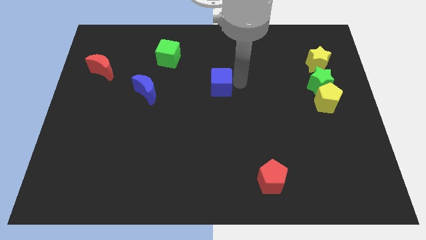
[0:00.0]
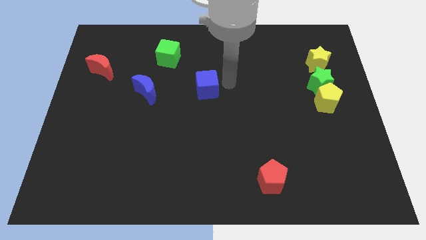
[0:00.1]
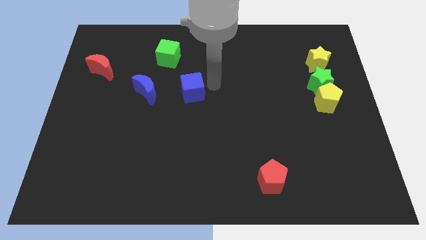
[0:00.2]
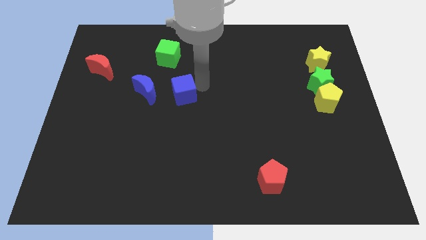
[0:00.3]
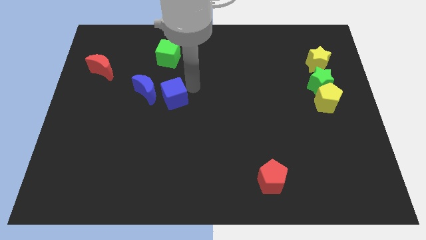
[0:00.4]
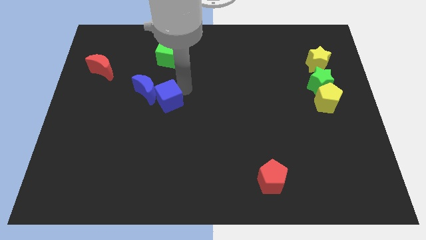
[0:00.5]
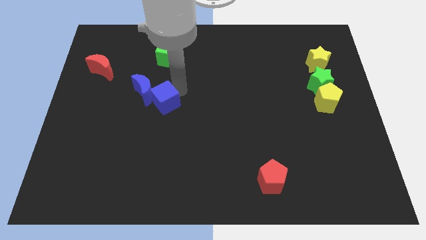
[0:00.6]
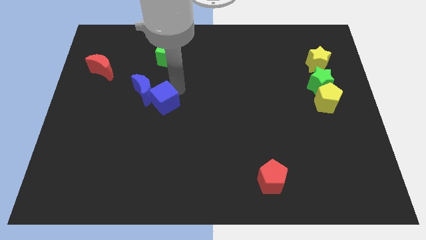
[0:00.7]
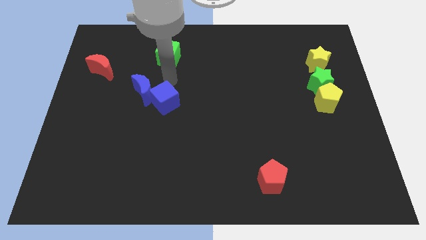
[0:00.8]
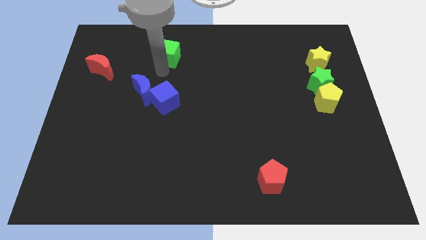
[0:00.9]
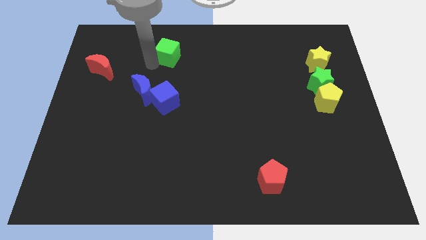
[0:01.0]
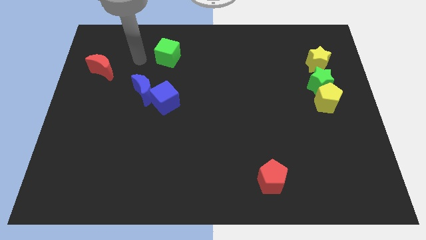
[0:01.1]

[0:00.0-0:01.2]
push blue cube close to blue moon

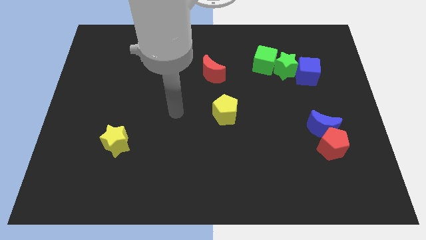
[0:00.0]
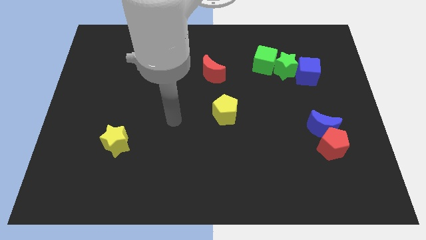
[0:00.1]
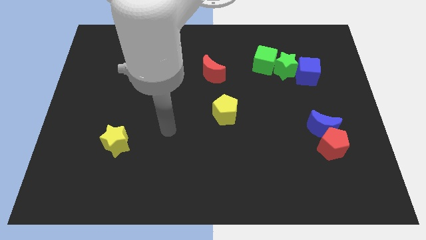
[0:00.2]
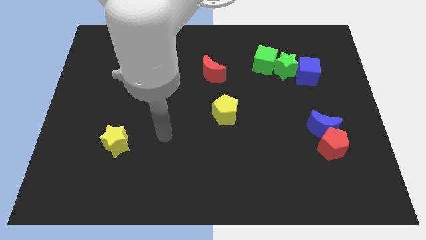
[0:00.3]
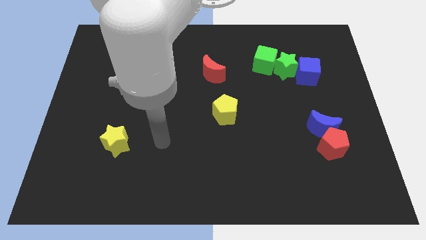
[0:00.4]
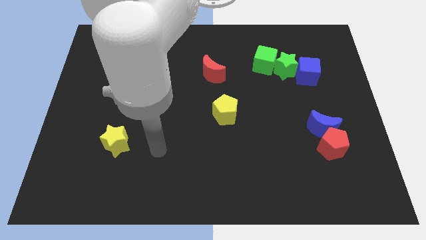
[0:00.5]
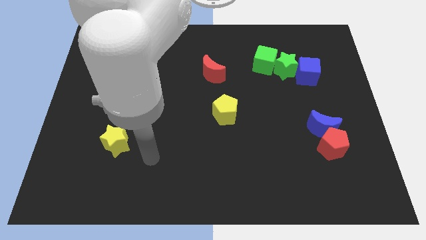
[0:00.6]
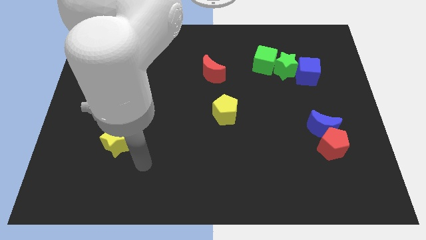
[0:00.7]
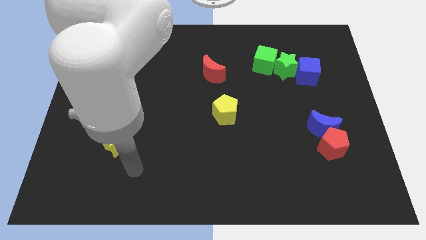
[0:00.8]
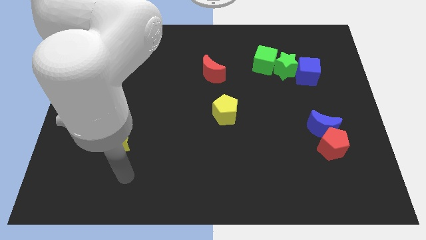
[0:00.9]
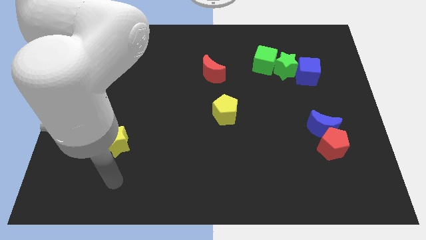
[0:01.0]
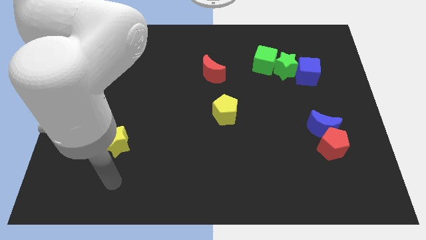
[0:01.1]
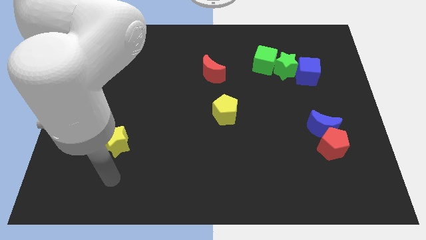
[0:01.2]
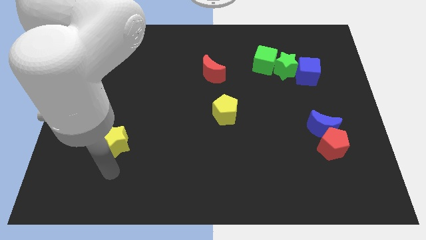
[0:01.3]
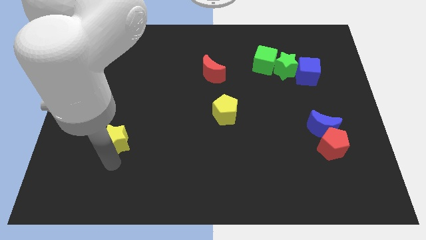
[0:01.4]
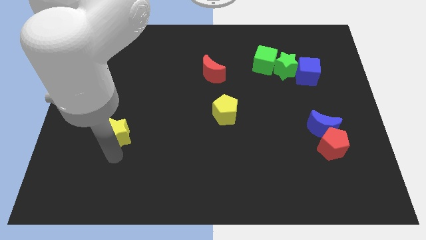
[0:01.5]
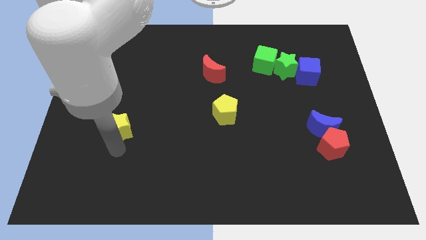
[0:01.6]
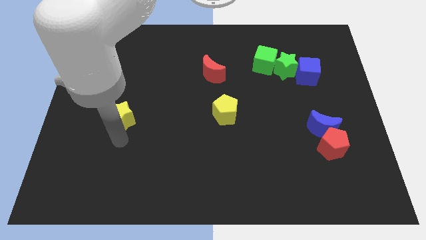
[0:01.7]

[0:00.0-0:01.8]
move the yellow star slightly up

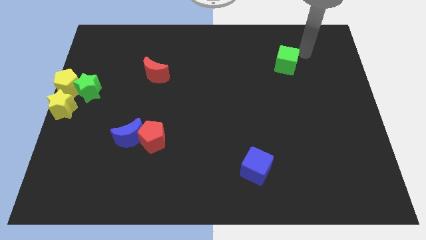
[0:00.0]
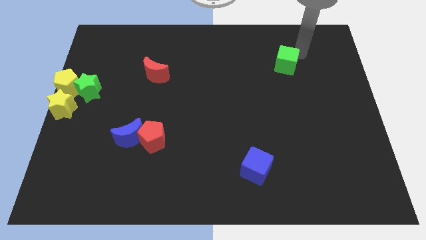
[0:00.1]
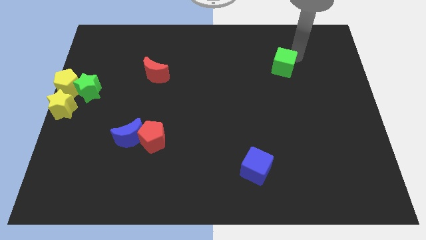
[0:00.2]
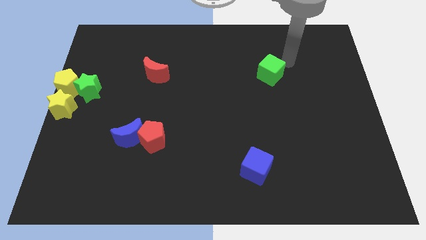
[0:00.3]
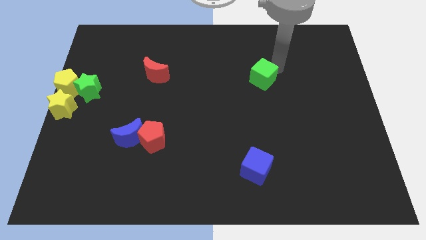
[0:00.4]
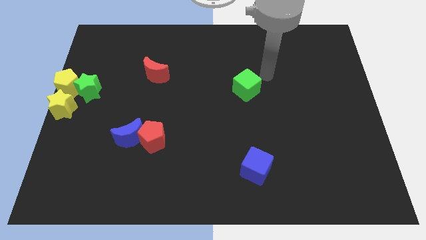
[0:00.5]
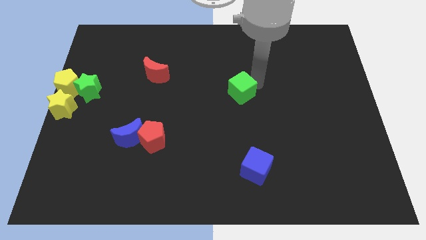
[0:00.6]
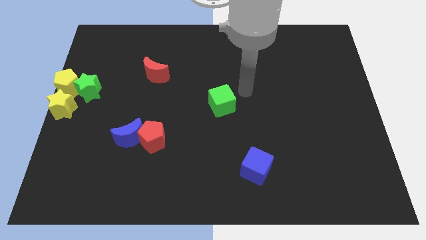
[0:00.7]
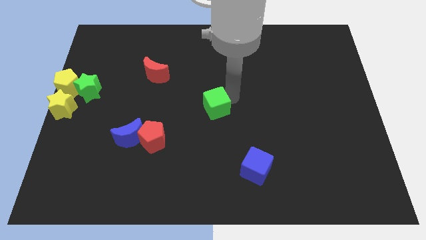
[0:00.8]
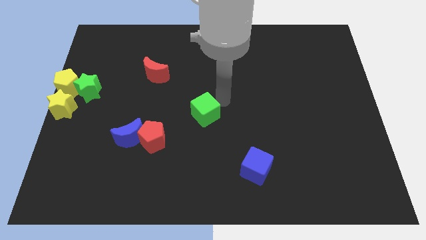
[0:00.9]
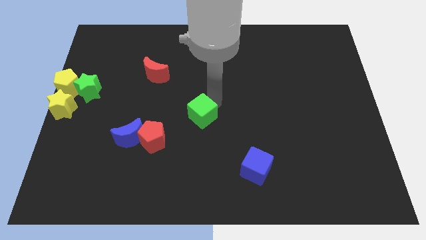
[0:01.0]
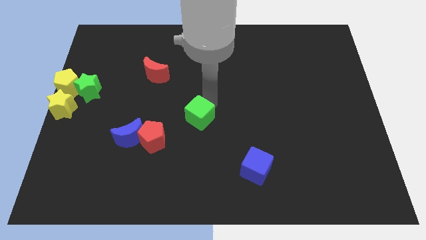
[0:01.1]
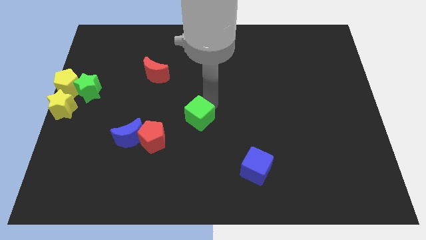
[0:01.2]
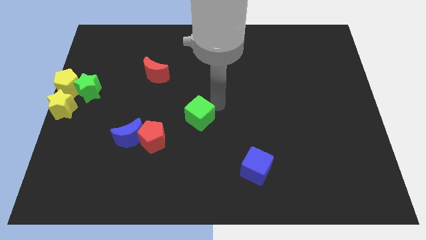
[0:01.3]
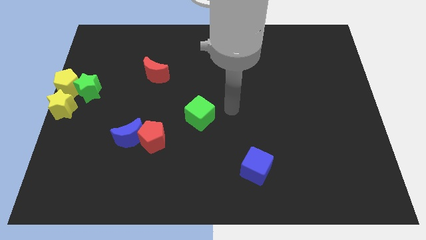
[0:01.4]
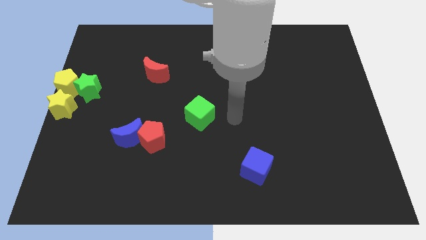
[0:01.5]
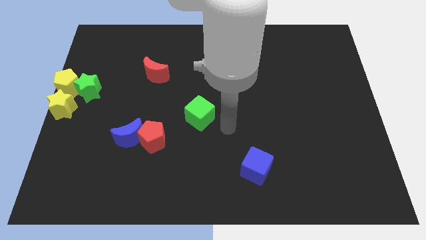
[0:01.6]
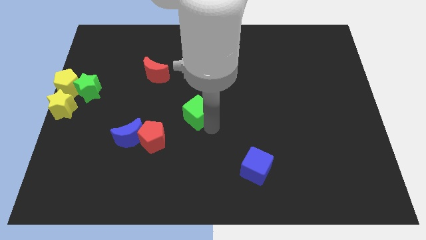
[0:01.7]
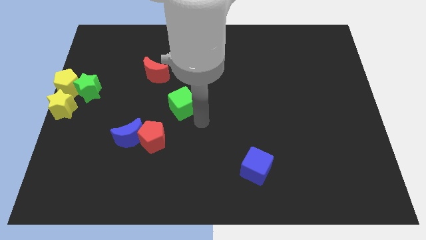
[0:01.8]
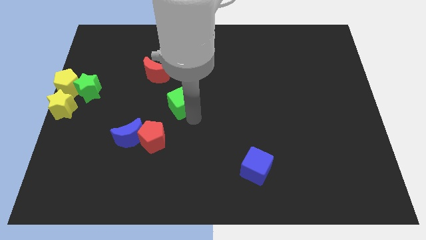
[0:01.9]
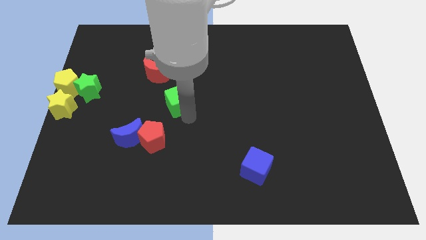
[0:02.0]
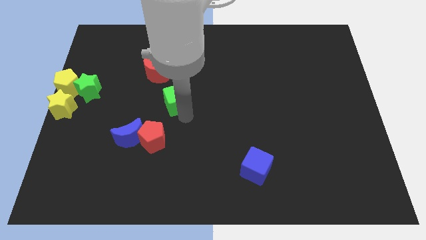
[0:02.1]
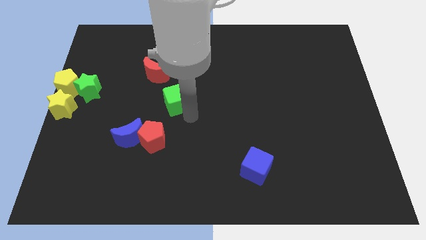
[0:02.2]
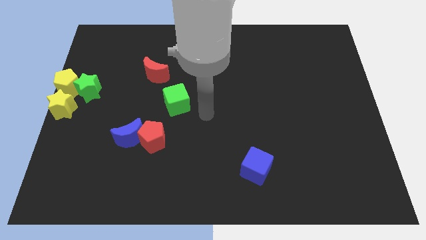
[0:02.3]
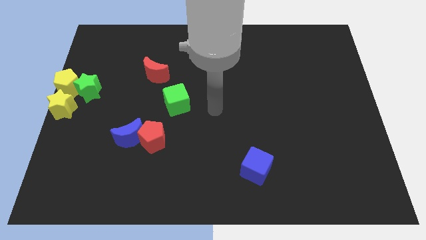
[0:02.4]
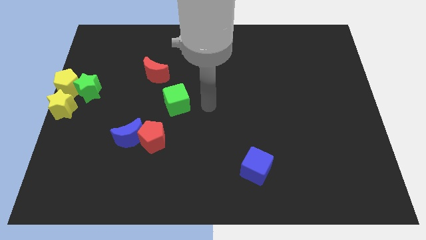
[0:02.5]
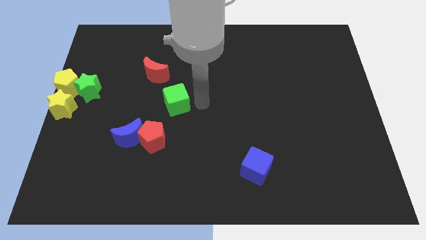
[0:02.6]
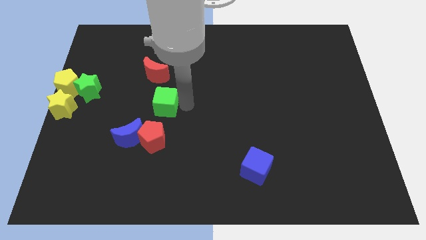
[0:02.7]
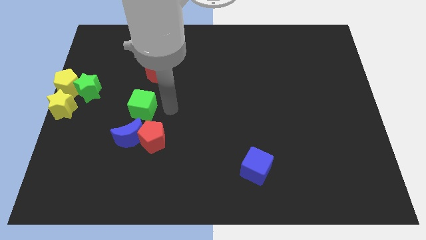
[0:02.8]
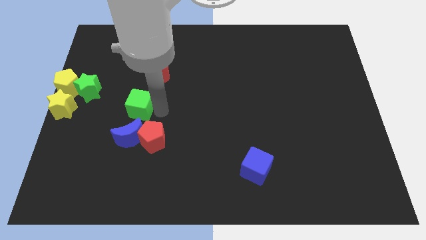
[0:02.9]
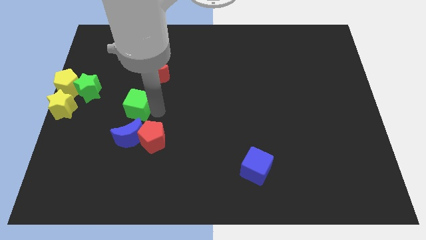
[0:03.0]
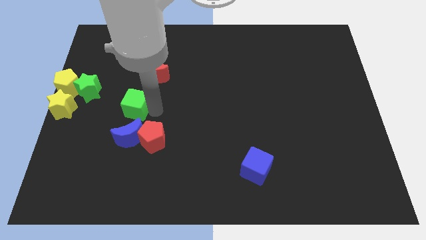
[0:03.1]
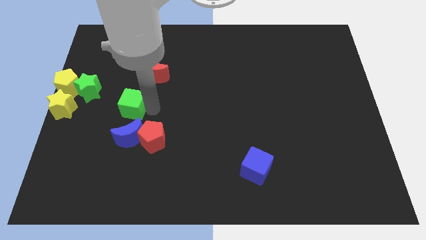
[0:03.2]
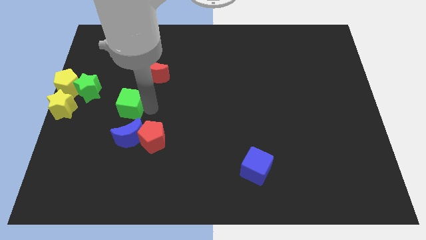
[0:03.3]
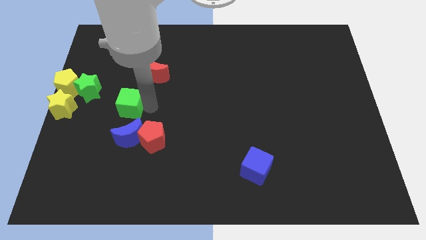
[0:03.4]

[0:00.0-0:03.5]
push the green cube to the top of the blue crescent

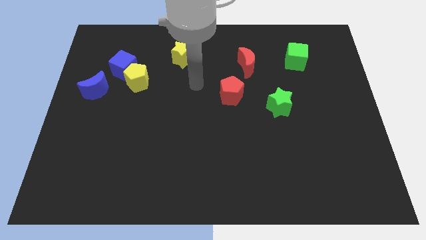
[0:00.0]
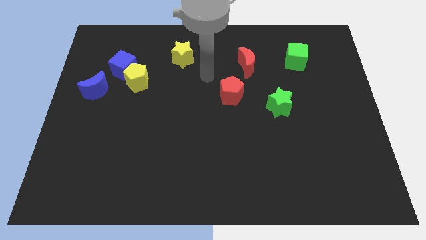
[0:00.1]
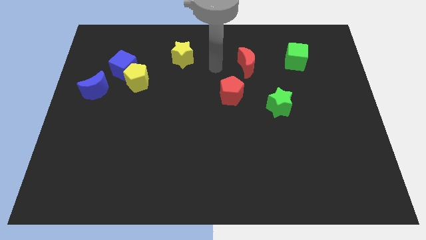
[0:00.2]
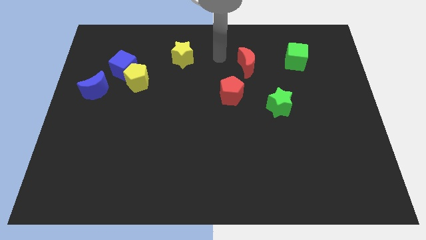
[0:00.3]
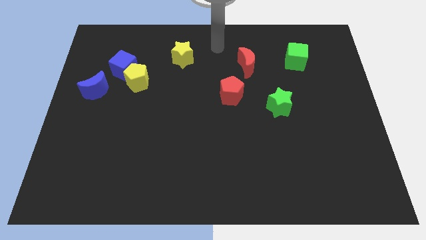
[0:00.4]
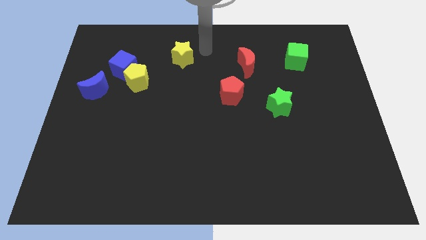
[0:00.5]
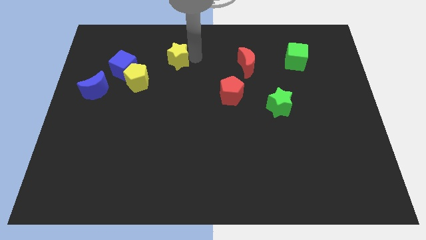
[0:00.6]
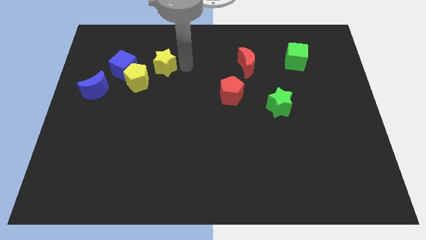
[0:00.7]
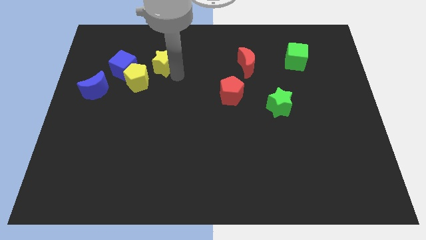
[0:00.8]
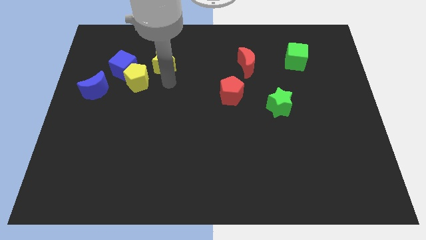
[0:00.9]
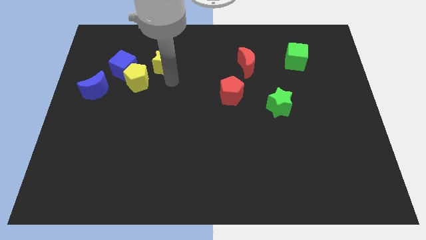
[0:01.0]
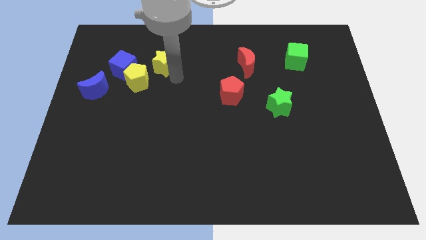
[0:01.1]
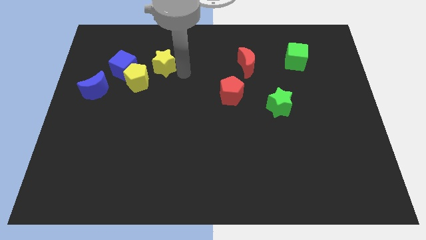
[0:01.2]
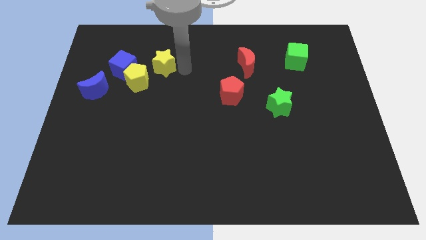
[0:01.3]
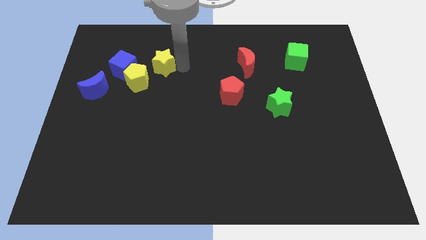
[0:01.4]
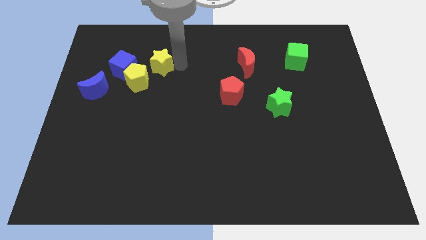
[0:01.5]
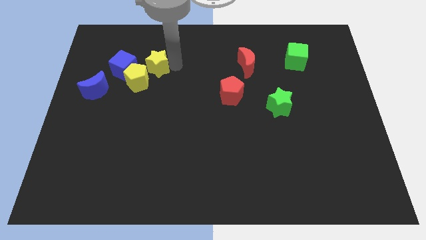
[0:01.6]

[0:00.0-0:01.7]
place the yellow star at the top right side of yellow pentagon

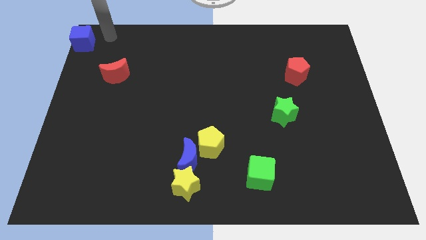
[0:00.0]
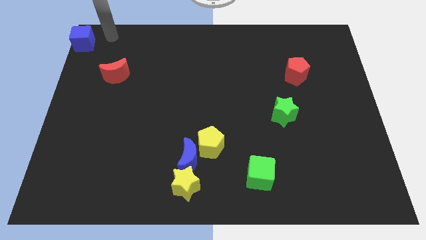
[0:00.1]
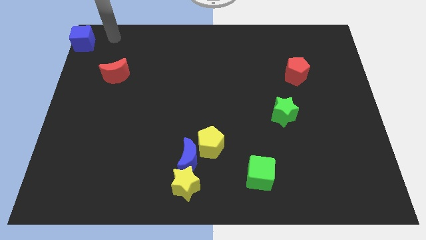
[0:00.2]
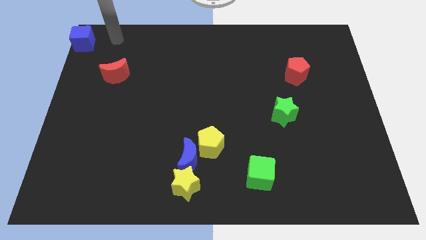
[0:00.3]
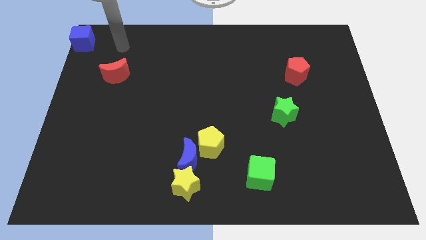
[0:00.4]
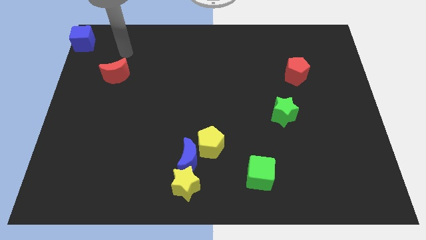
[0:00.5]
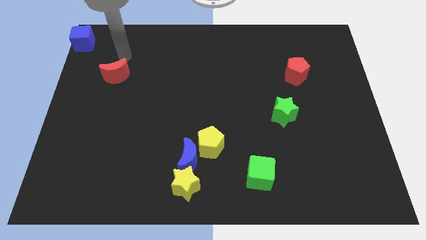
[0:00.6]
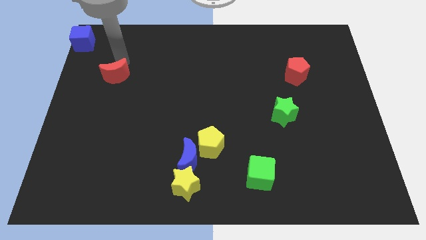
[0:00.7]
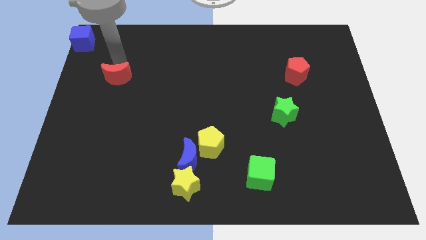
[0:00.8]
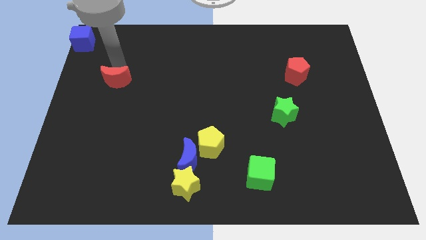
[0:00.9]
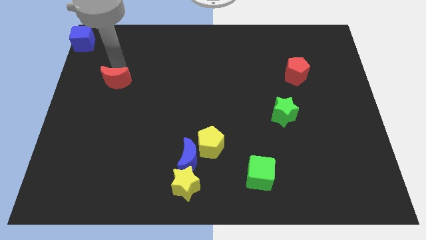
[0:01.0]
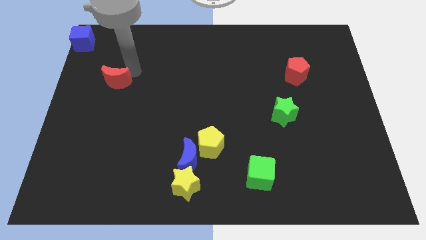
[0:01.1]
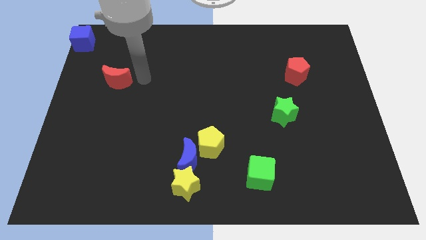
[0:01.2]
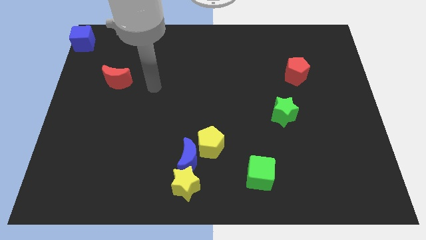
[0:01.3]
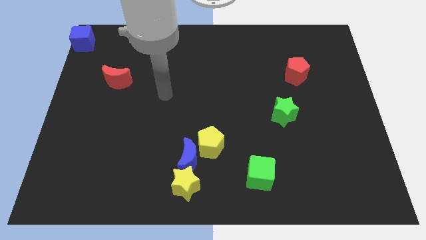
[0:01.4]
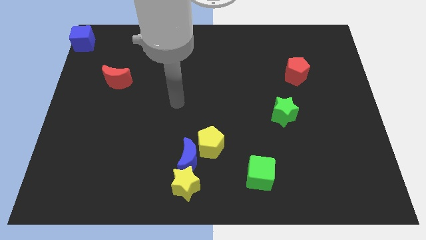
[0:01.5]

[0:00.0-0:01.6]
move the red crescent slightly to the down
